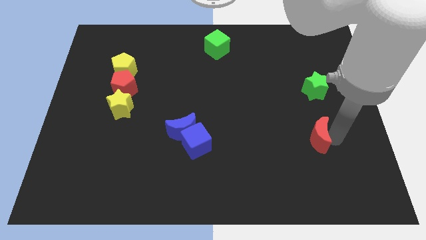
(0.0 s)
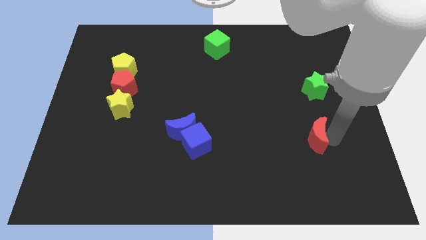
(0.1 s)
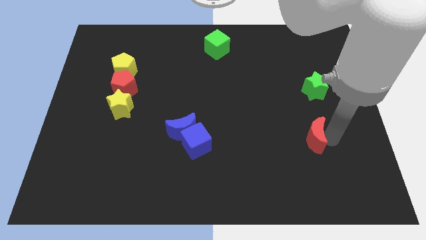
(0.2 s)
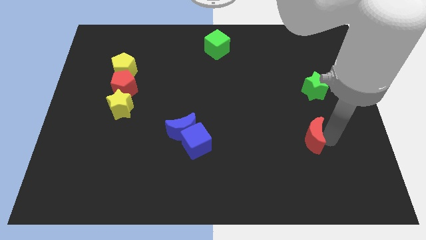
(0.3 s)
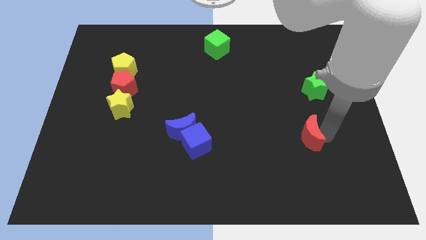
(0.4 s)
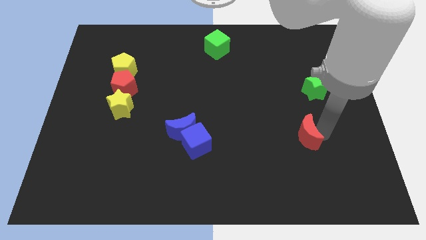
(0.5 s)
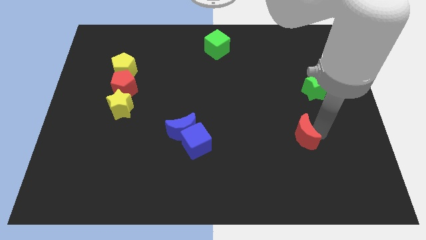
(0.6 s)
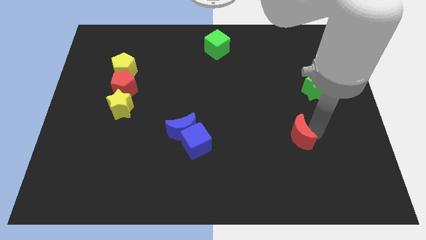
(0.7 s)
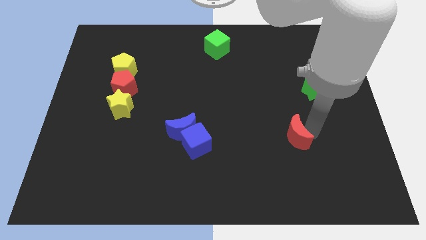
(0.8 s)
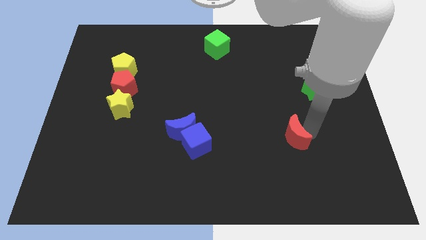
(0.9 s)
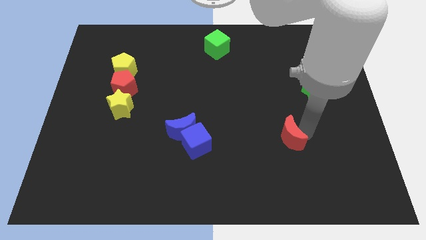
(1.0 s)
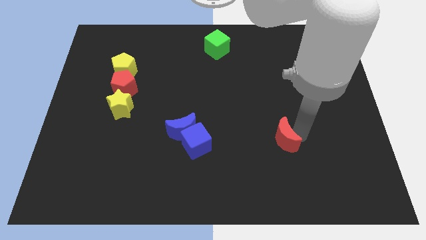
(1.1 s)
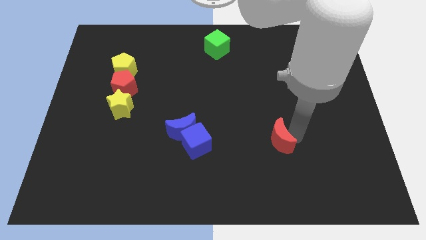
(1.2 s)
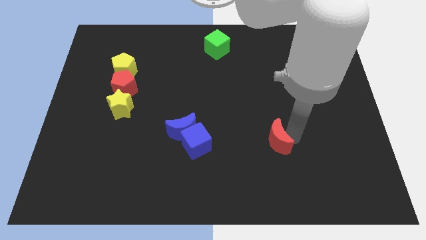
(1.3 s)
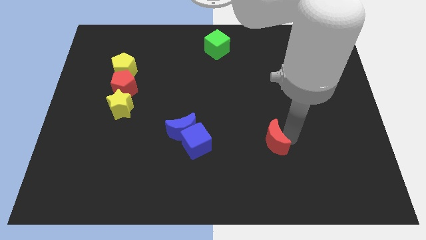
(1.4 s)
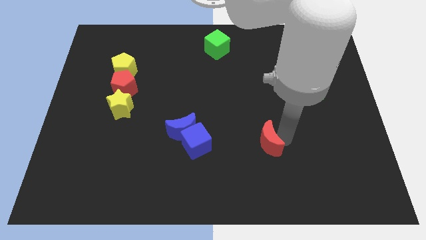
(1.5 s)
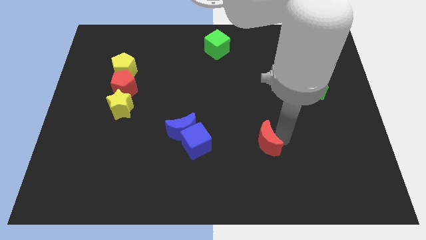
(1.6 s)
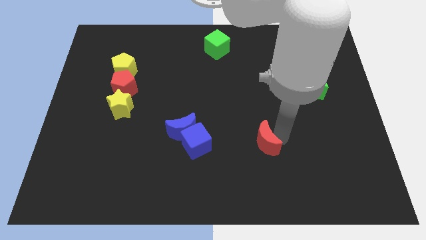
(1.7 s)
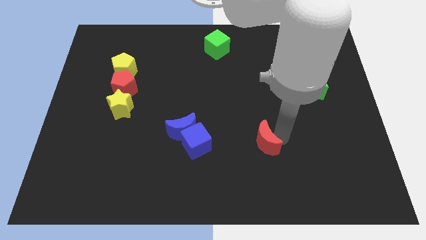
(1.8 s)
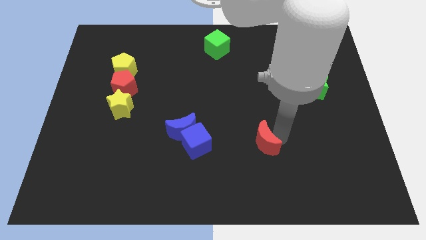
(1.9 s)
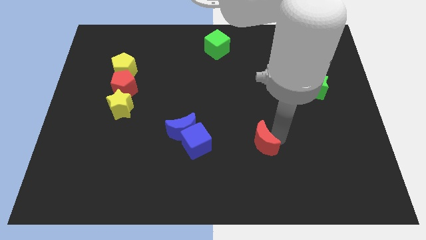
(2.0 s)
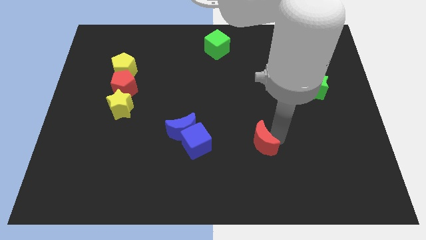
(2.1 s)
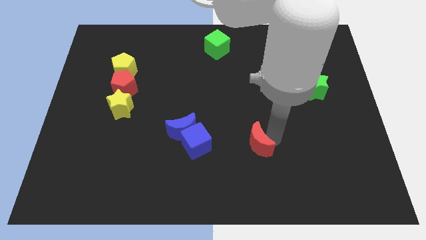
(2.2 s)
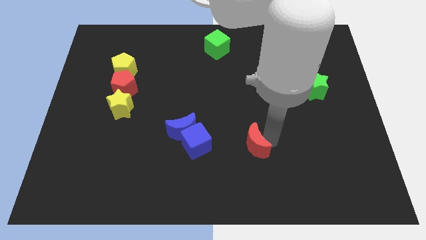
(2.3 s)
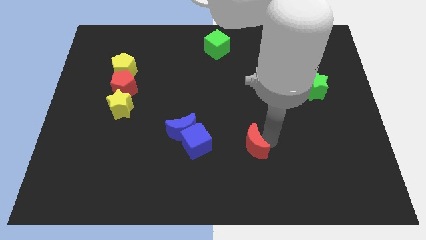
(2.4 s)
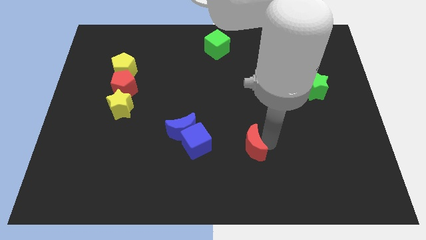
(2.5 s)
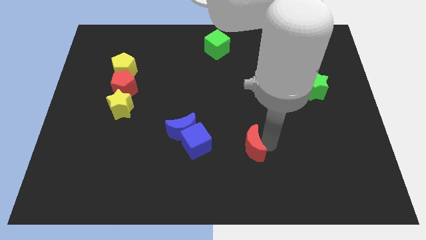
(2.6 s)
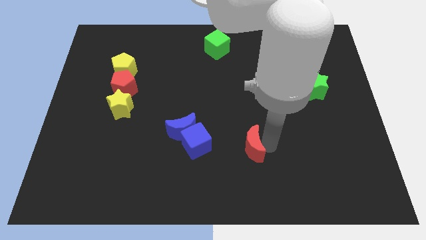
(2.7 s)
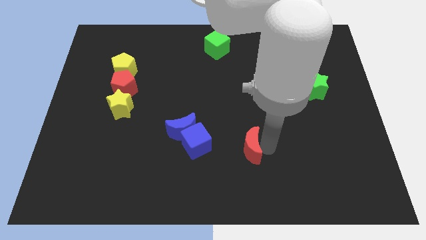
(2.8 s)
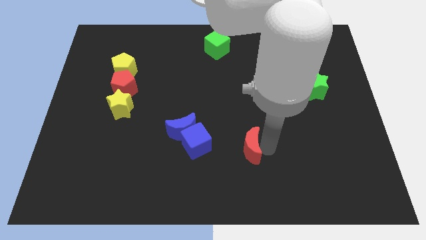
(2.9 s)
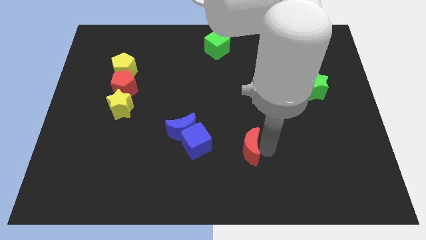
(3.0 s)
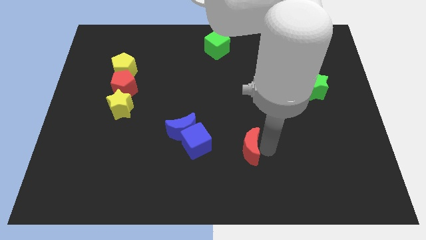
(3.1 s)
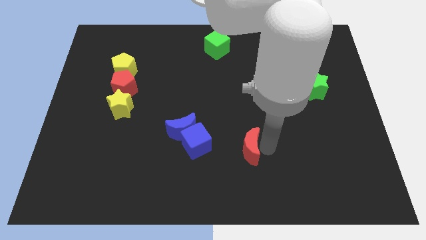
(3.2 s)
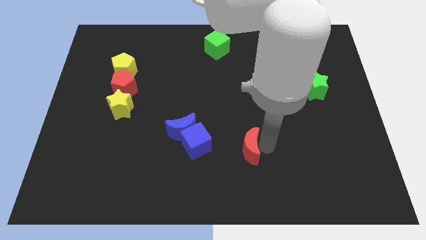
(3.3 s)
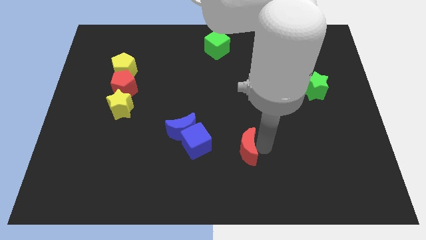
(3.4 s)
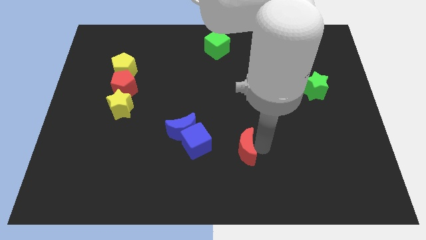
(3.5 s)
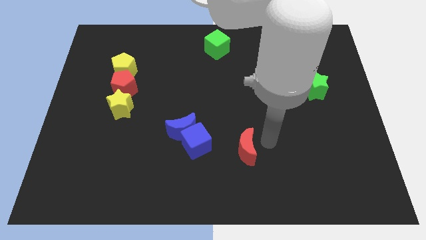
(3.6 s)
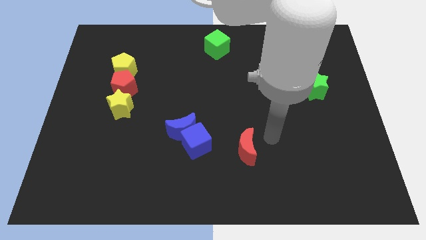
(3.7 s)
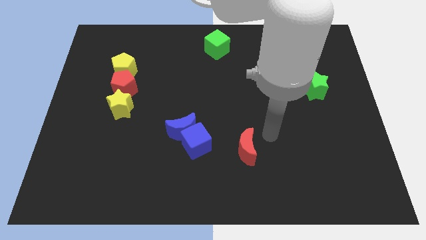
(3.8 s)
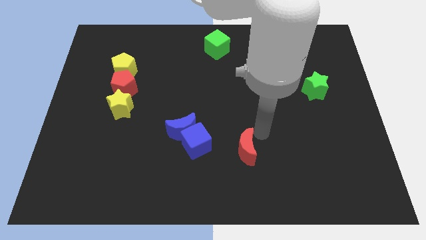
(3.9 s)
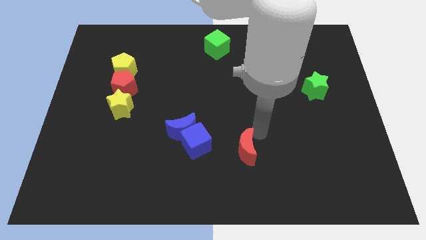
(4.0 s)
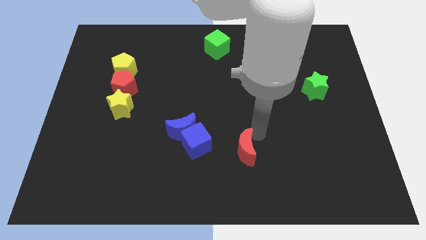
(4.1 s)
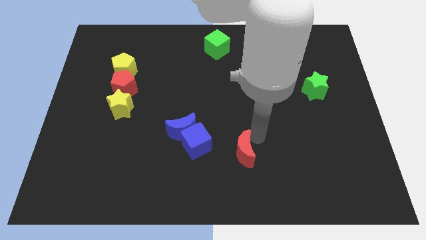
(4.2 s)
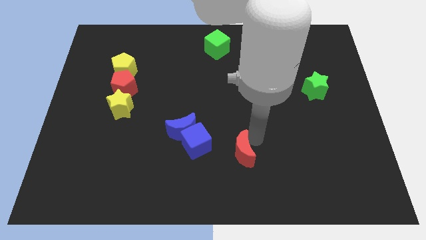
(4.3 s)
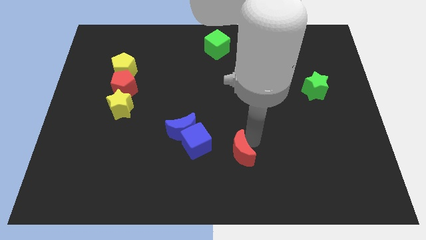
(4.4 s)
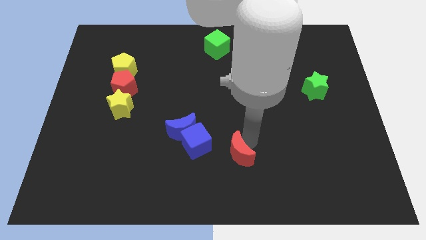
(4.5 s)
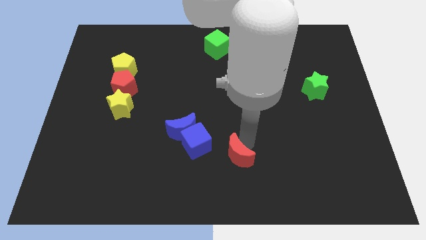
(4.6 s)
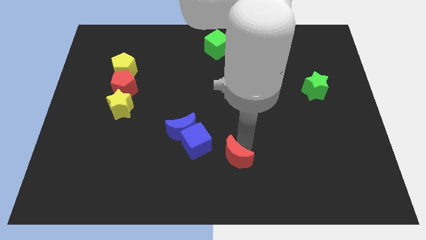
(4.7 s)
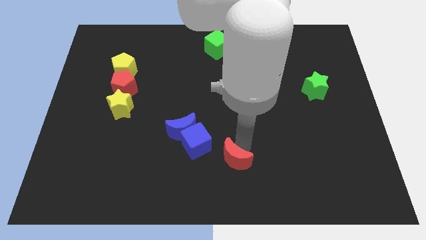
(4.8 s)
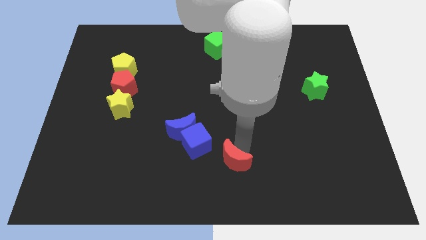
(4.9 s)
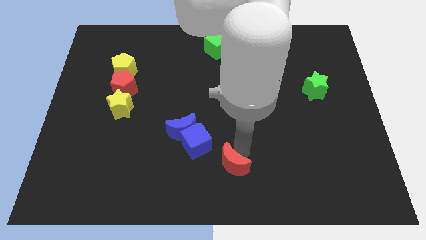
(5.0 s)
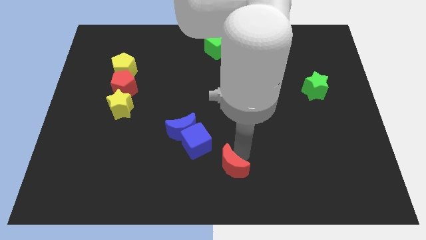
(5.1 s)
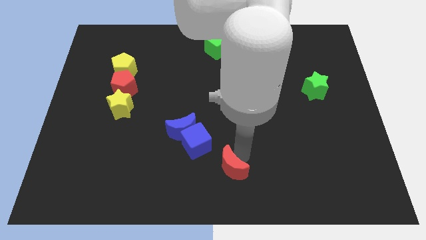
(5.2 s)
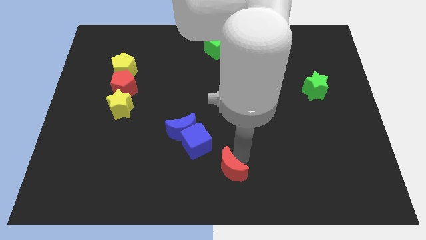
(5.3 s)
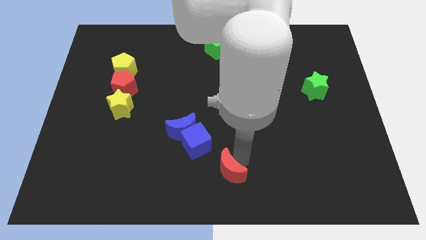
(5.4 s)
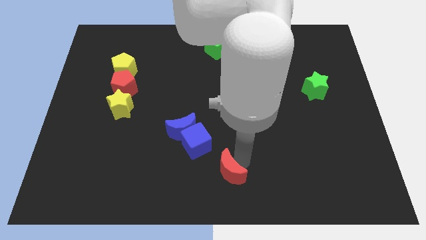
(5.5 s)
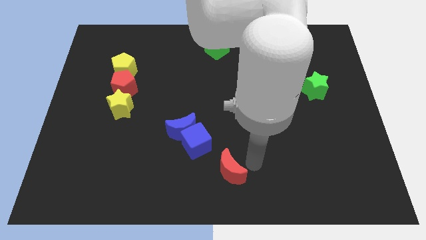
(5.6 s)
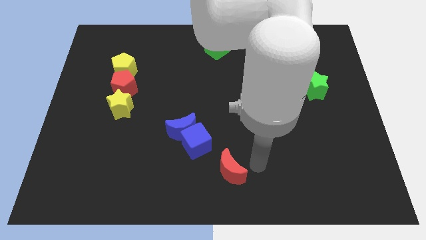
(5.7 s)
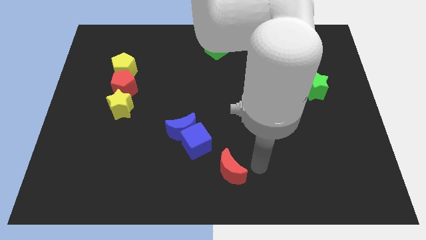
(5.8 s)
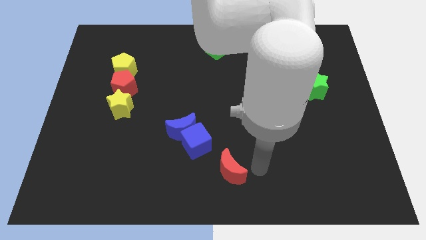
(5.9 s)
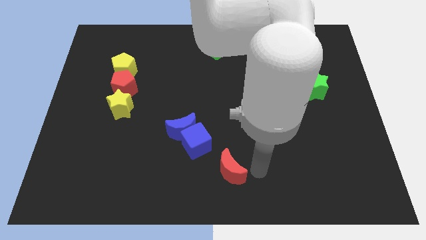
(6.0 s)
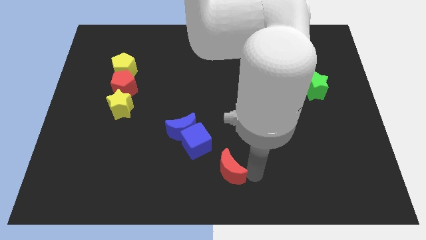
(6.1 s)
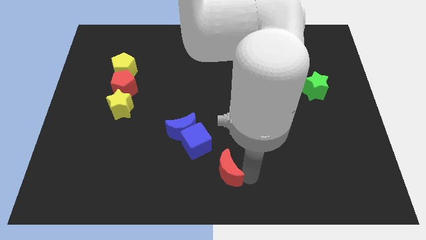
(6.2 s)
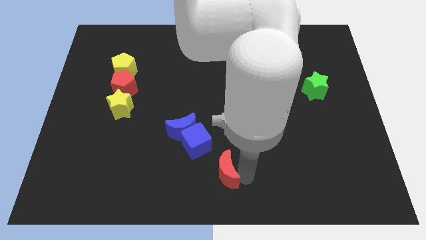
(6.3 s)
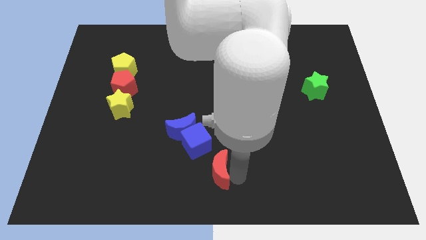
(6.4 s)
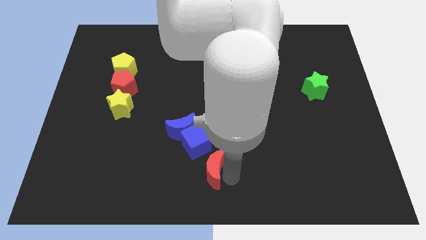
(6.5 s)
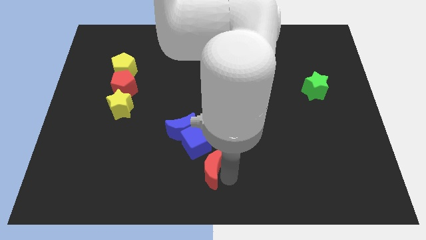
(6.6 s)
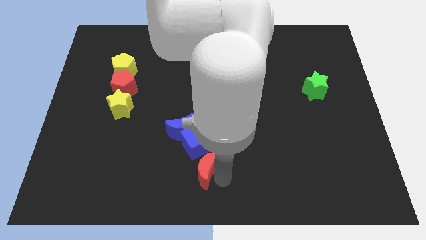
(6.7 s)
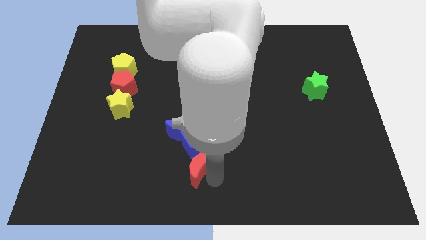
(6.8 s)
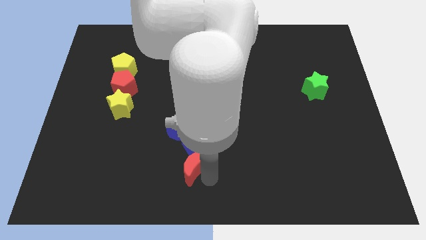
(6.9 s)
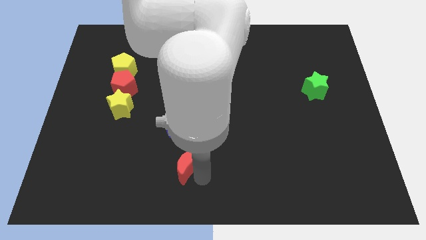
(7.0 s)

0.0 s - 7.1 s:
slide red moon below blue cube

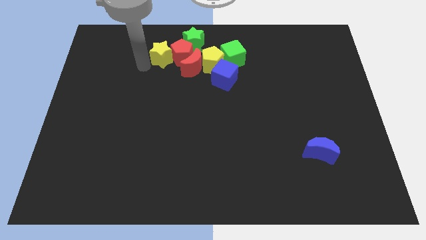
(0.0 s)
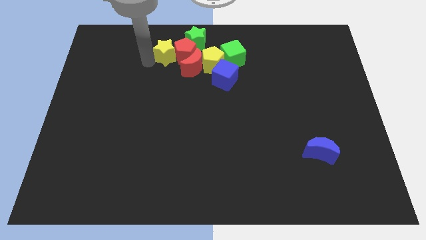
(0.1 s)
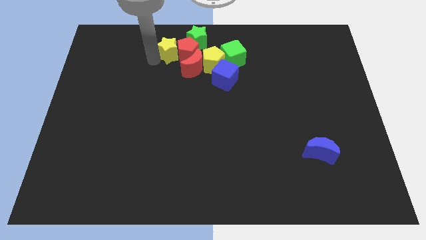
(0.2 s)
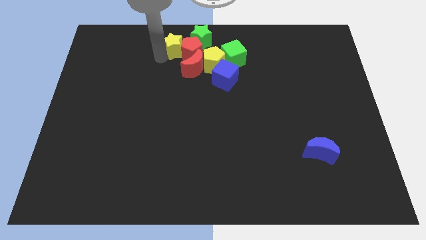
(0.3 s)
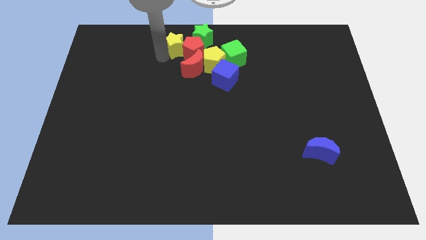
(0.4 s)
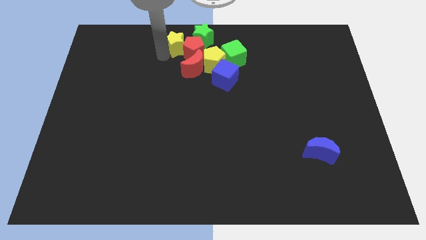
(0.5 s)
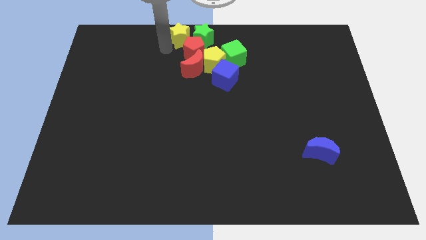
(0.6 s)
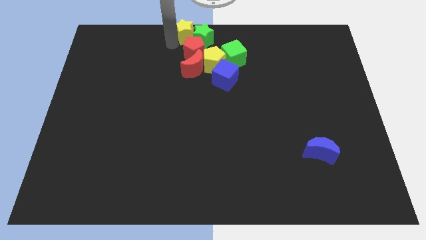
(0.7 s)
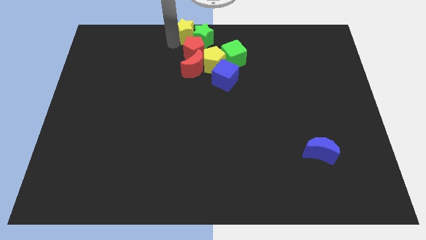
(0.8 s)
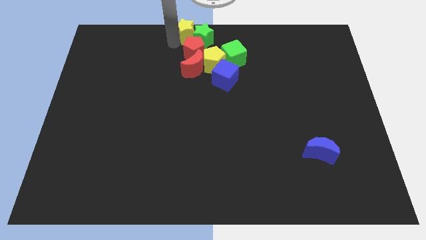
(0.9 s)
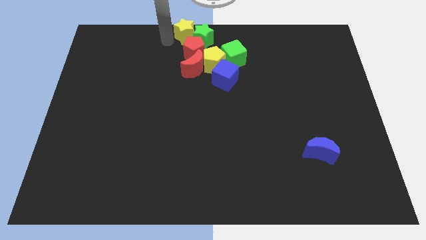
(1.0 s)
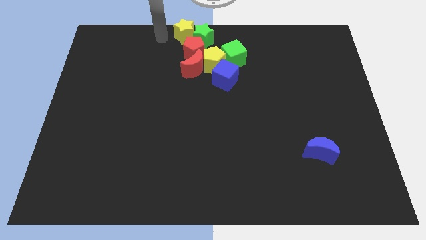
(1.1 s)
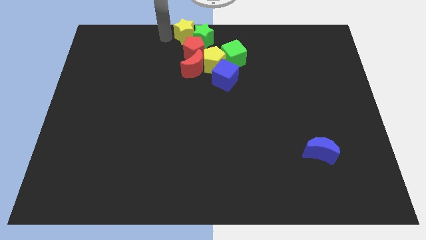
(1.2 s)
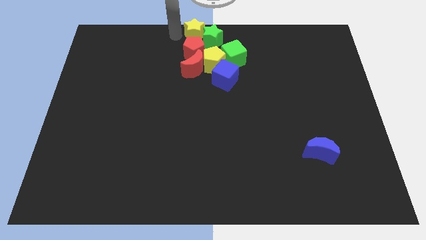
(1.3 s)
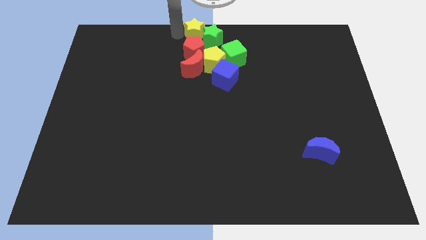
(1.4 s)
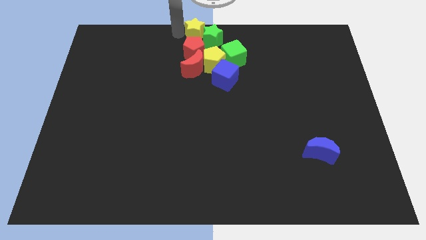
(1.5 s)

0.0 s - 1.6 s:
place the yellow star above the red pentagon

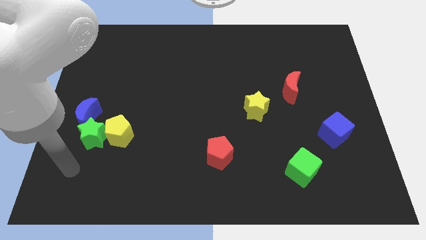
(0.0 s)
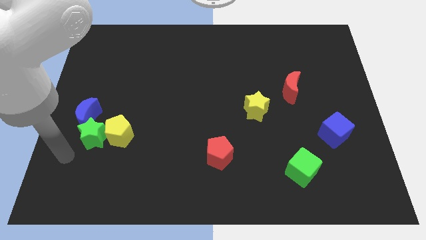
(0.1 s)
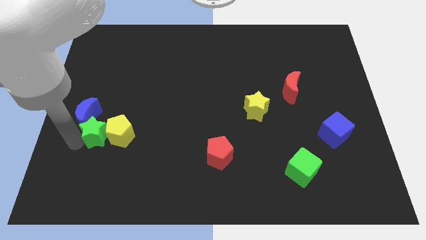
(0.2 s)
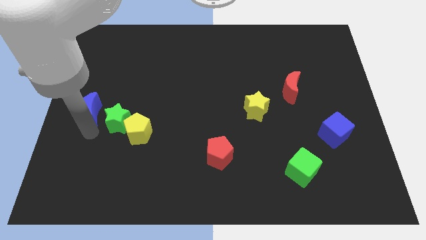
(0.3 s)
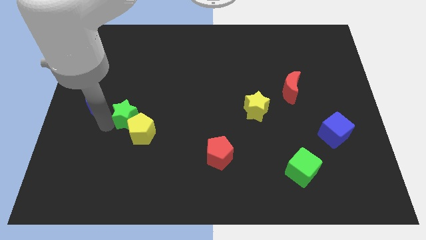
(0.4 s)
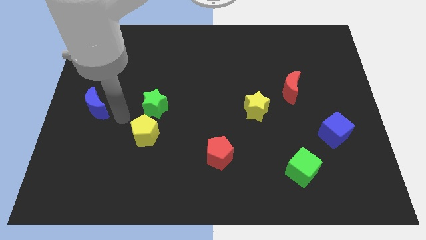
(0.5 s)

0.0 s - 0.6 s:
push green star slightly towards upwards
